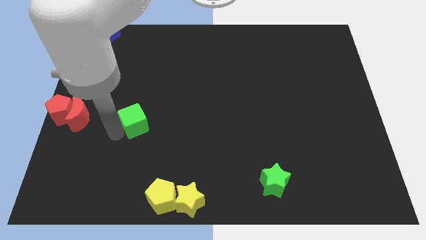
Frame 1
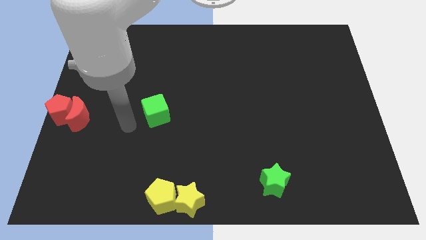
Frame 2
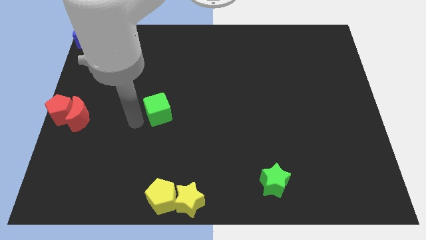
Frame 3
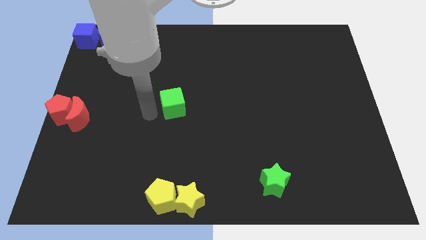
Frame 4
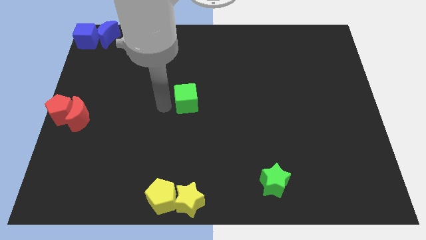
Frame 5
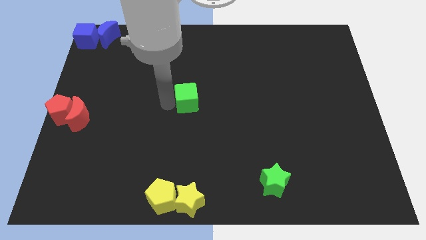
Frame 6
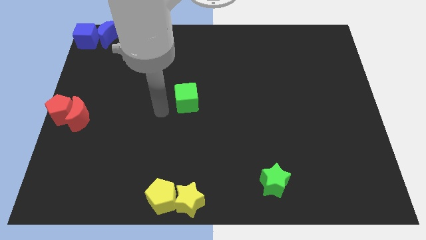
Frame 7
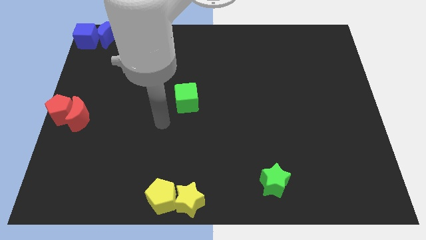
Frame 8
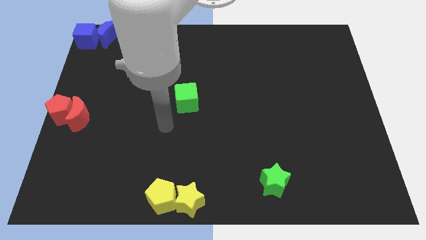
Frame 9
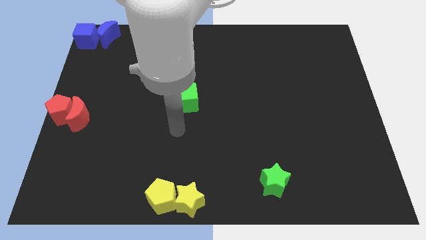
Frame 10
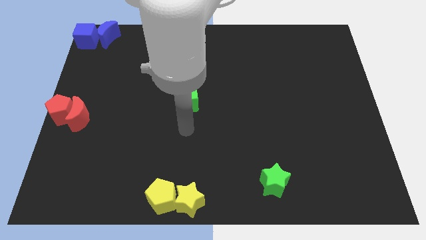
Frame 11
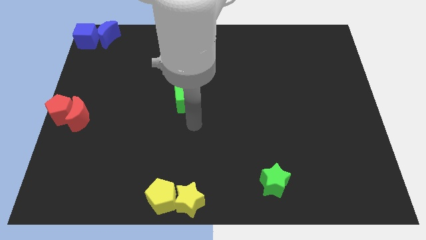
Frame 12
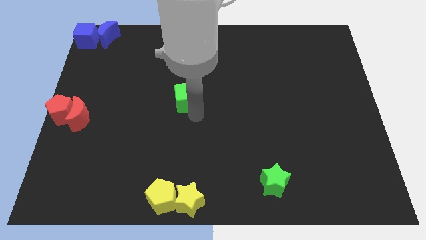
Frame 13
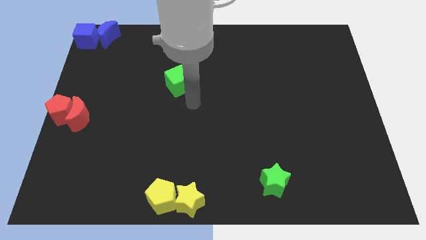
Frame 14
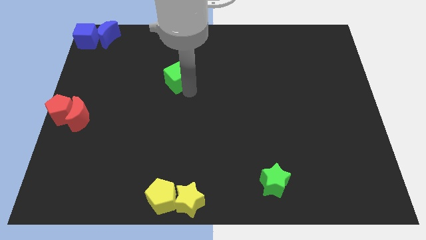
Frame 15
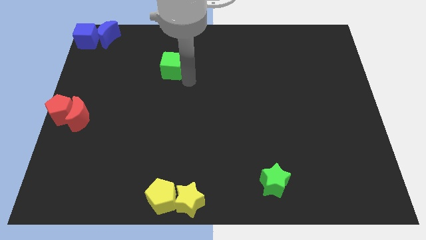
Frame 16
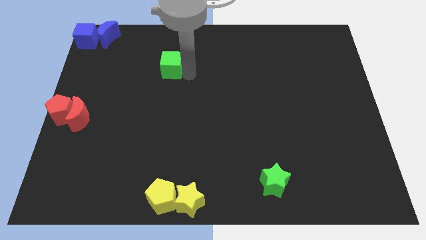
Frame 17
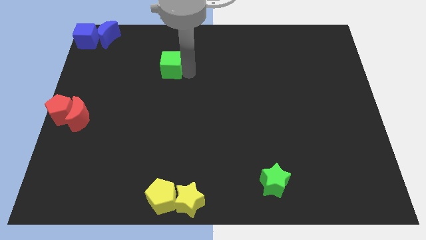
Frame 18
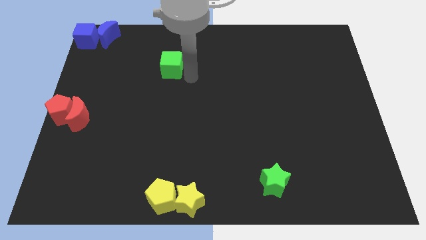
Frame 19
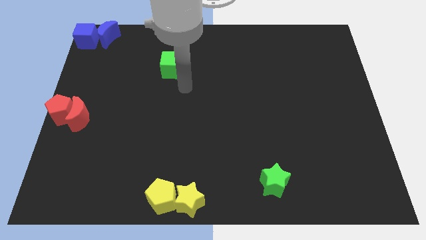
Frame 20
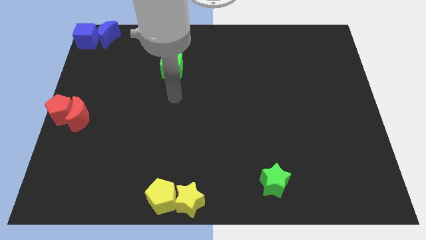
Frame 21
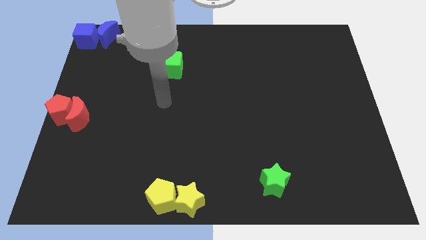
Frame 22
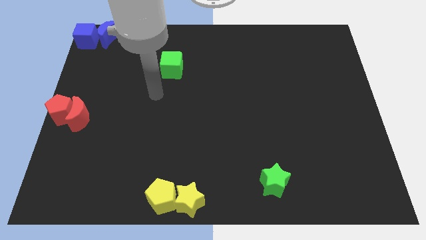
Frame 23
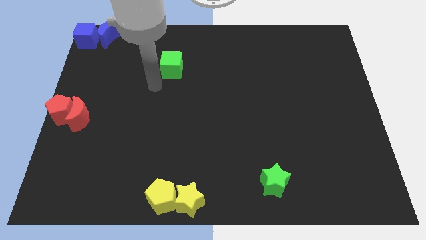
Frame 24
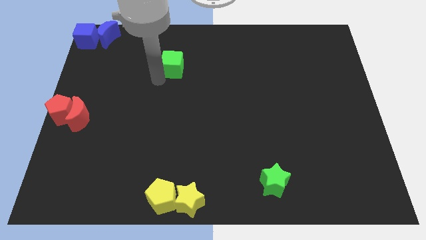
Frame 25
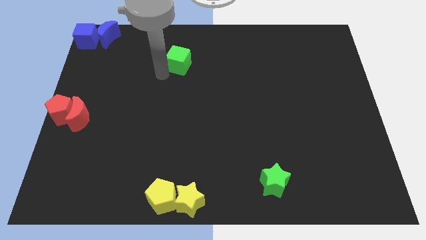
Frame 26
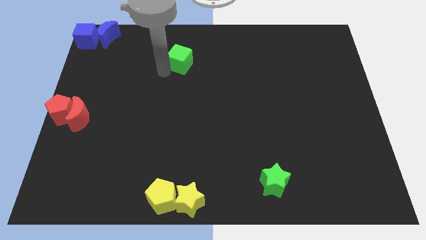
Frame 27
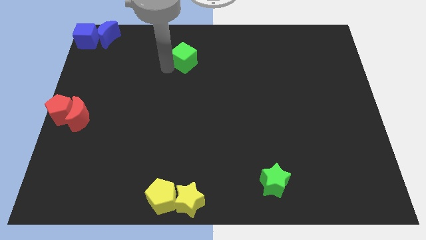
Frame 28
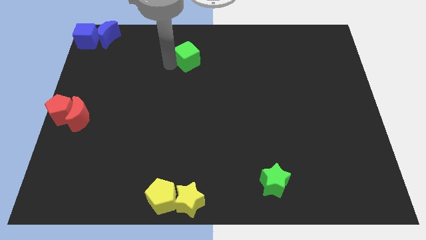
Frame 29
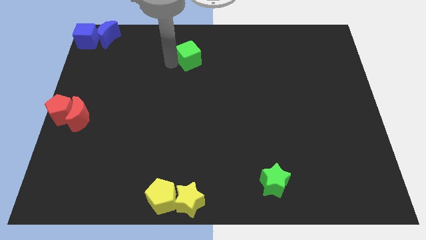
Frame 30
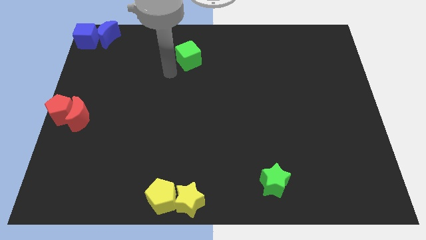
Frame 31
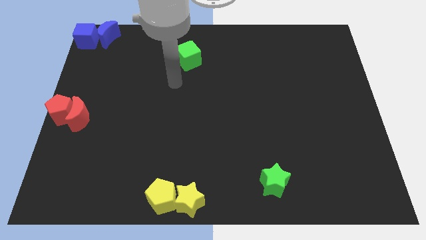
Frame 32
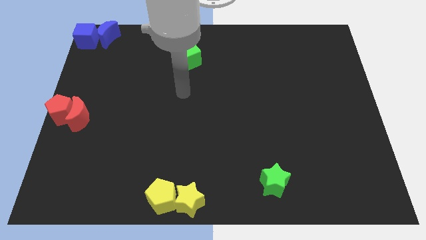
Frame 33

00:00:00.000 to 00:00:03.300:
put the green cube diagonally top right to the red blocks

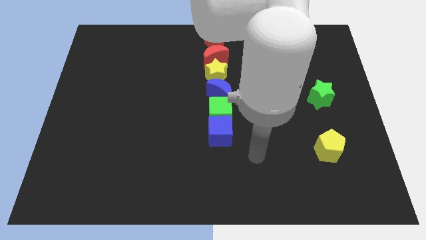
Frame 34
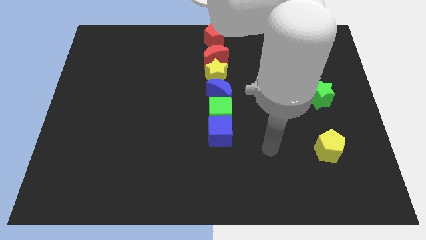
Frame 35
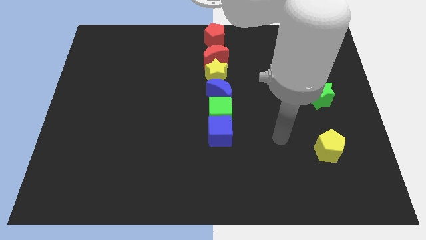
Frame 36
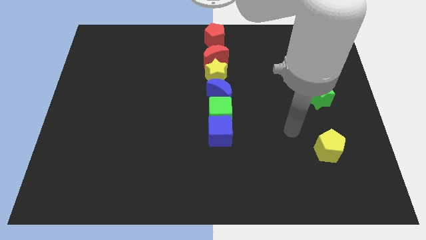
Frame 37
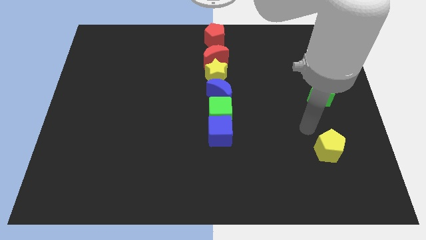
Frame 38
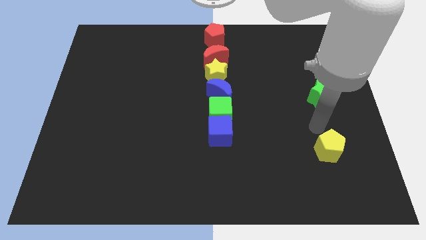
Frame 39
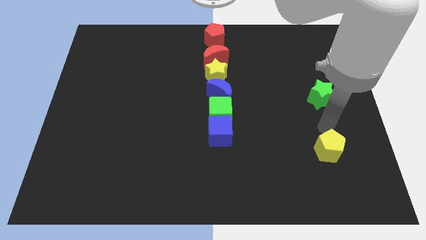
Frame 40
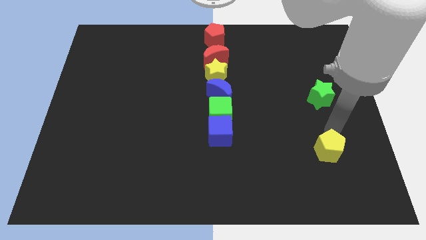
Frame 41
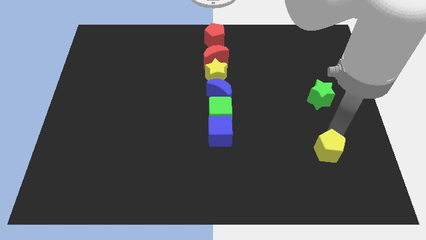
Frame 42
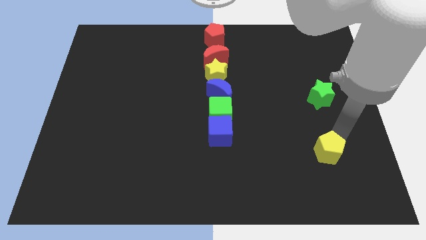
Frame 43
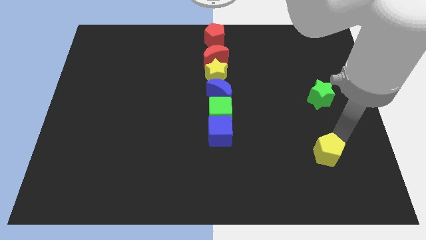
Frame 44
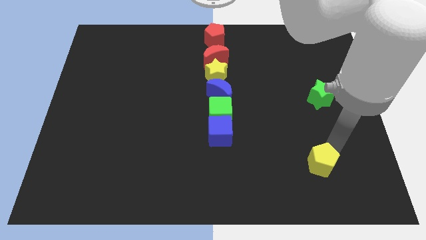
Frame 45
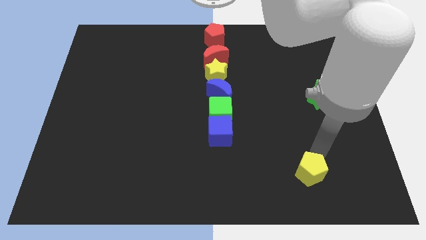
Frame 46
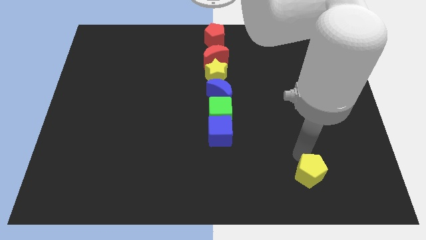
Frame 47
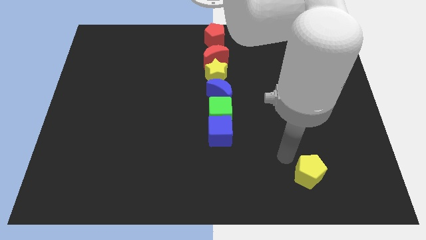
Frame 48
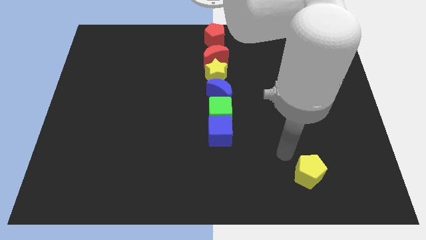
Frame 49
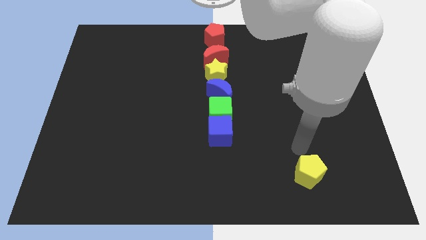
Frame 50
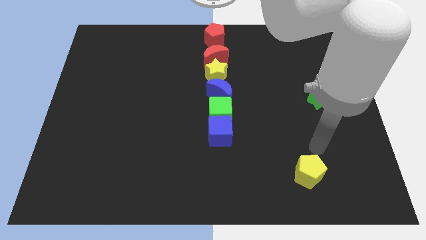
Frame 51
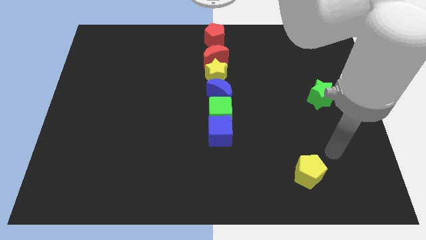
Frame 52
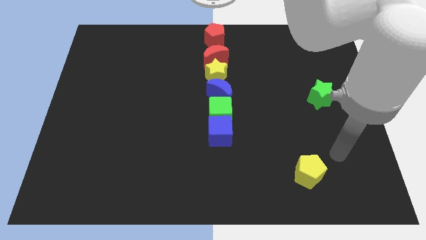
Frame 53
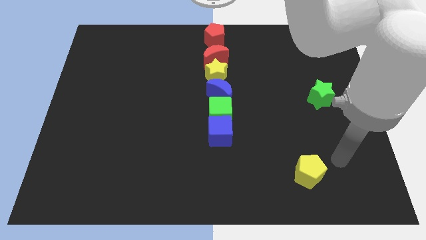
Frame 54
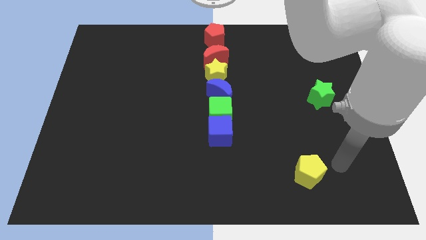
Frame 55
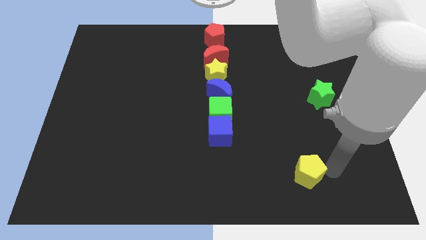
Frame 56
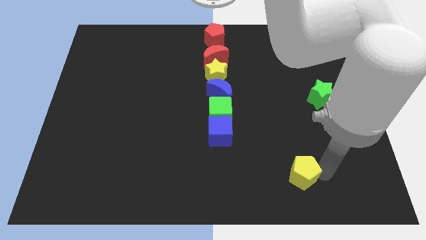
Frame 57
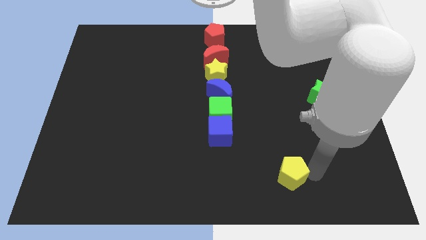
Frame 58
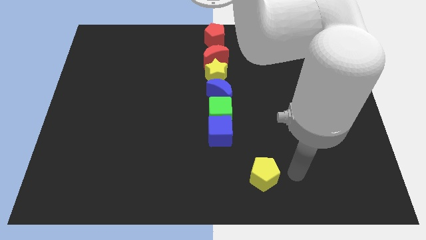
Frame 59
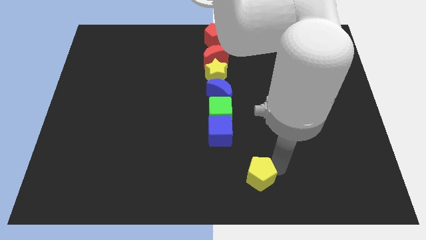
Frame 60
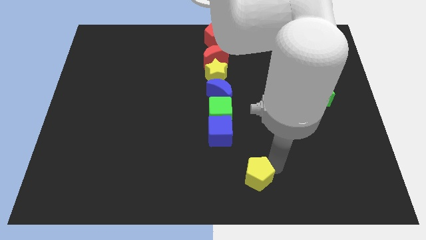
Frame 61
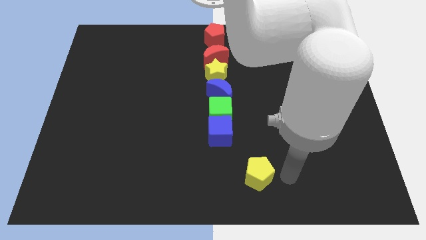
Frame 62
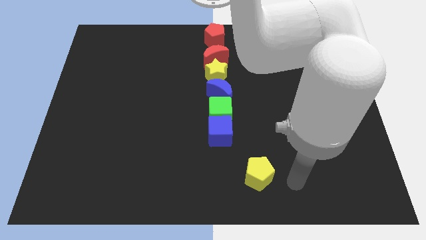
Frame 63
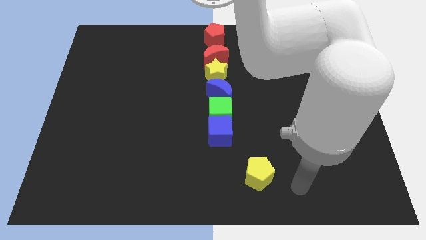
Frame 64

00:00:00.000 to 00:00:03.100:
move yellow pentagon to the bottom right of blue cube

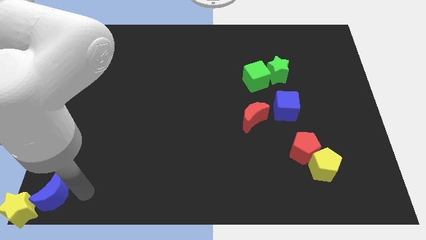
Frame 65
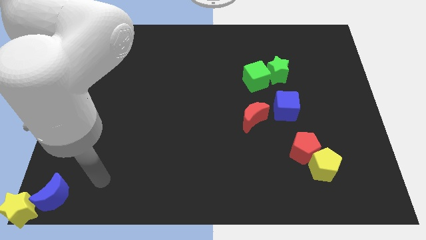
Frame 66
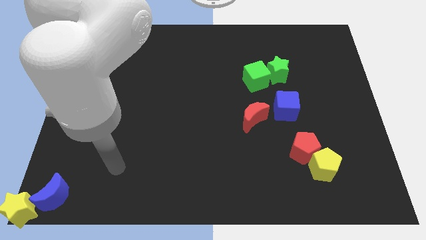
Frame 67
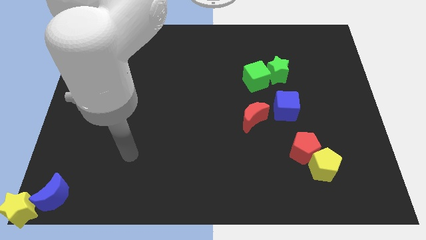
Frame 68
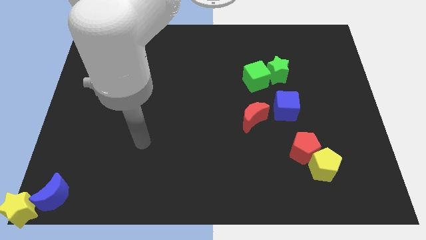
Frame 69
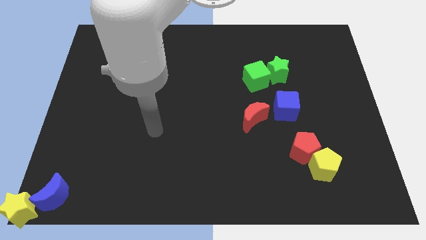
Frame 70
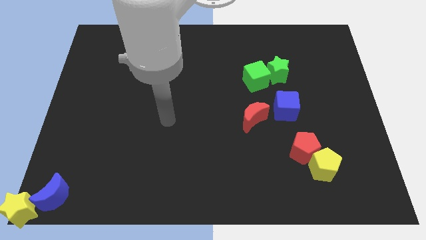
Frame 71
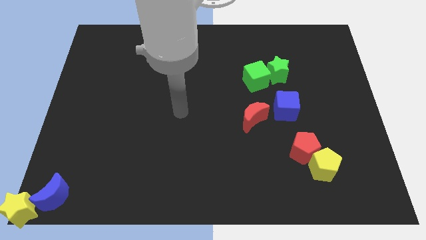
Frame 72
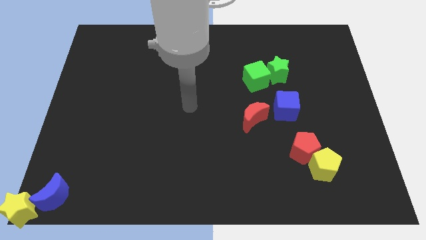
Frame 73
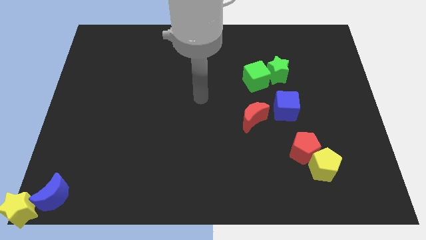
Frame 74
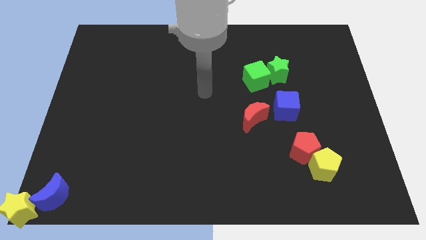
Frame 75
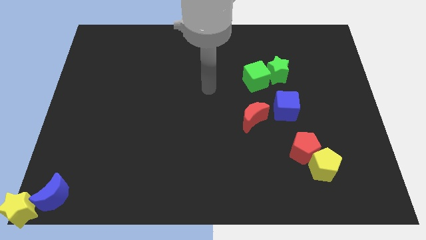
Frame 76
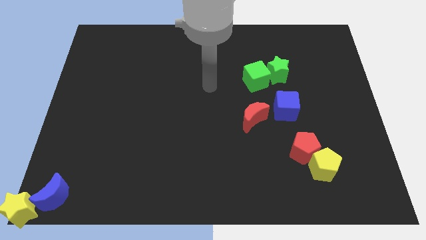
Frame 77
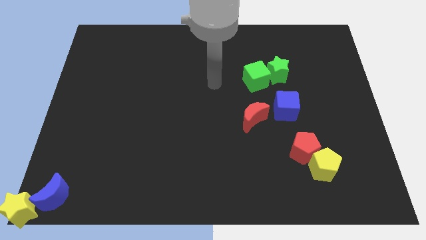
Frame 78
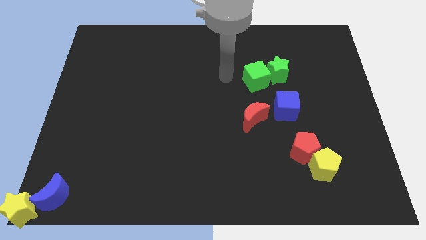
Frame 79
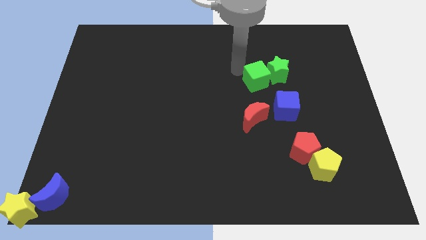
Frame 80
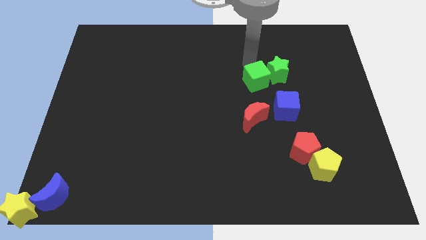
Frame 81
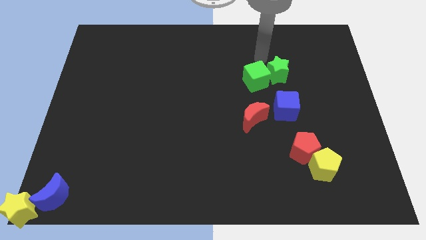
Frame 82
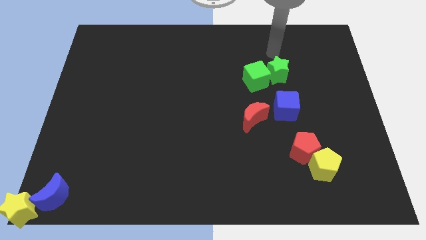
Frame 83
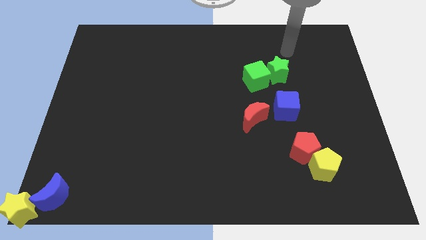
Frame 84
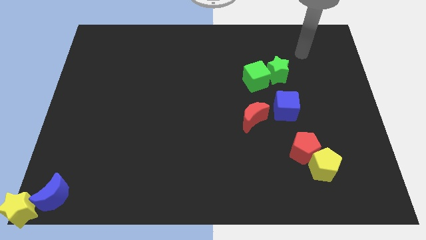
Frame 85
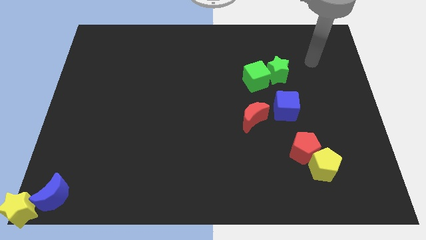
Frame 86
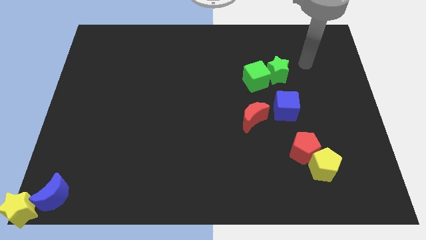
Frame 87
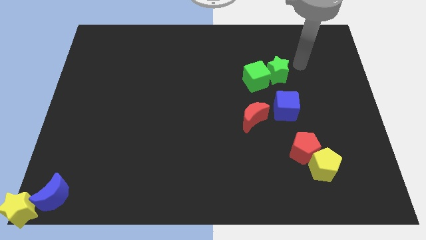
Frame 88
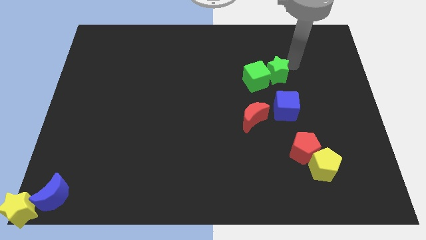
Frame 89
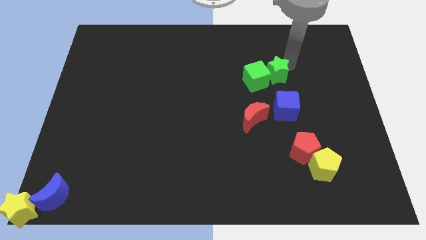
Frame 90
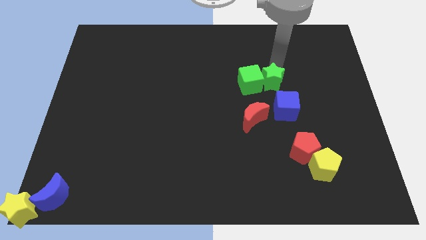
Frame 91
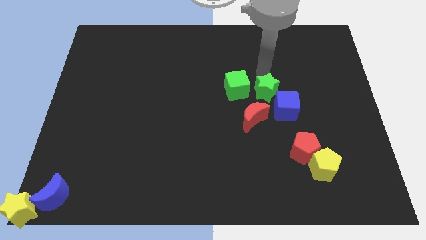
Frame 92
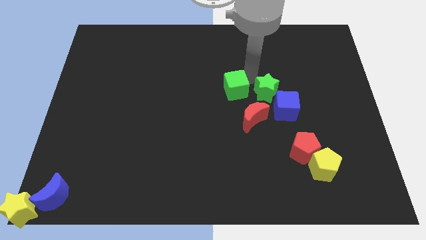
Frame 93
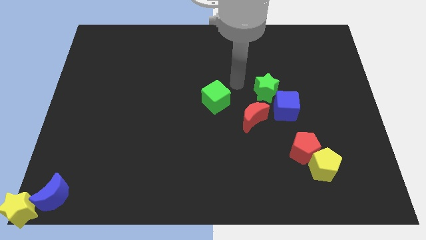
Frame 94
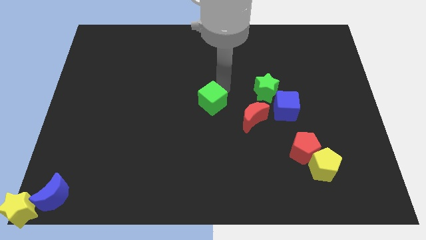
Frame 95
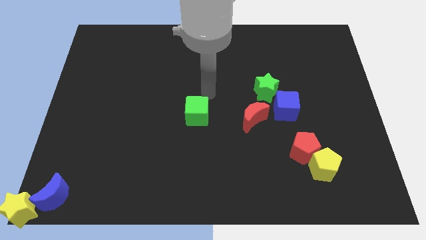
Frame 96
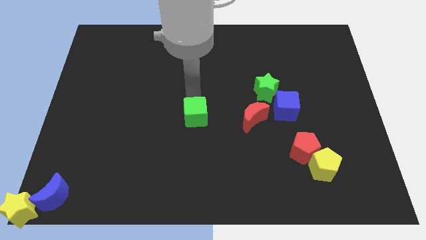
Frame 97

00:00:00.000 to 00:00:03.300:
slide the green cube to the left side of the red crescent
